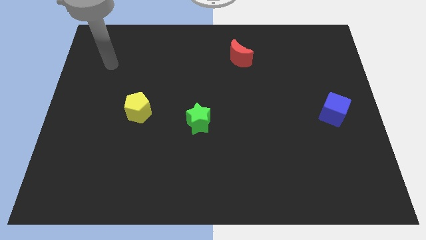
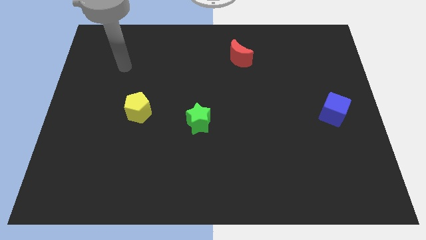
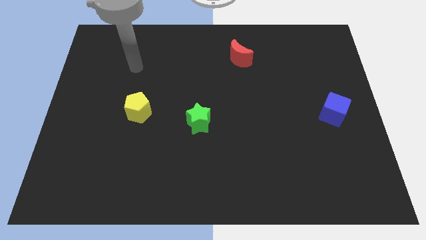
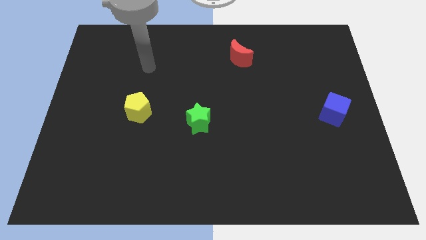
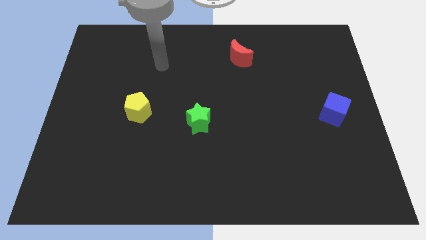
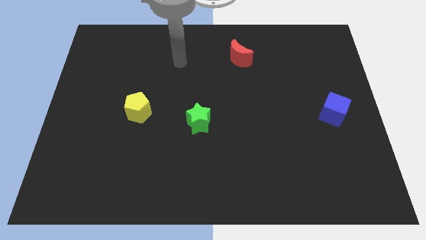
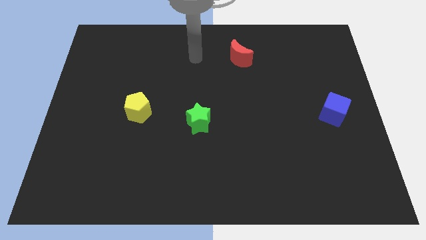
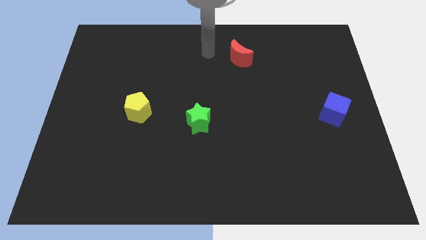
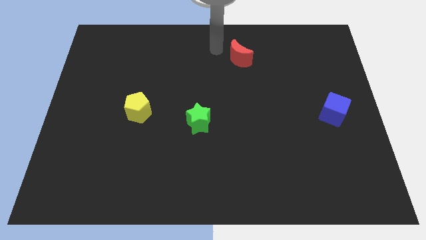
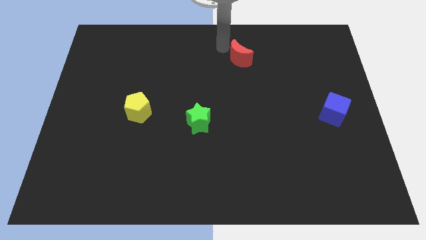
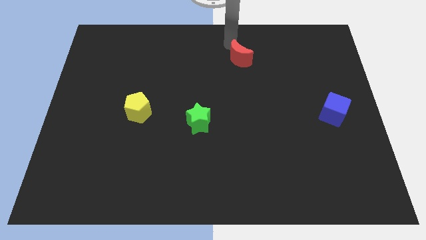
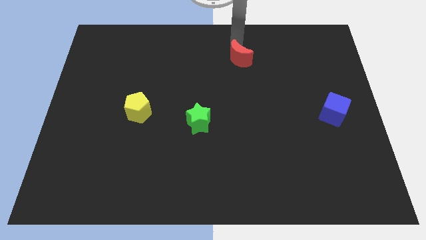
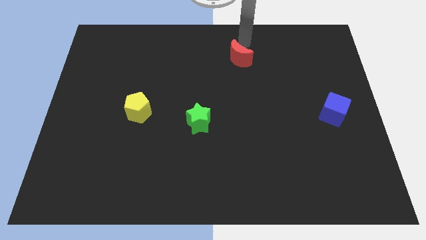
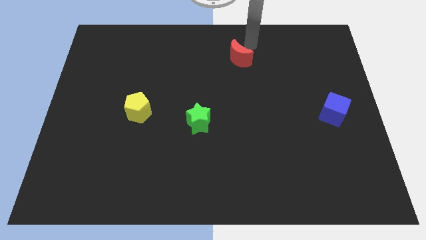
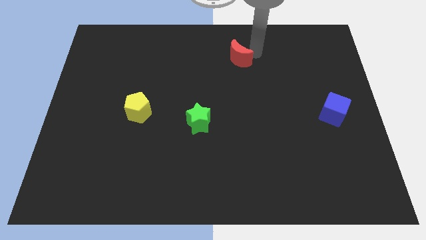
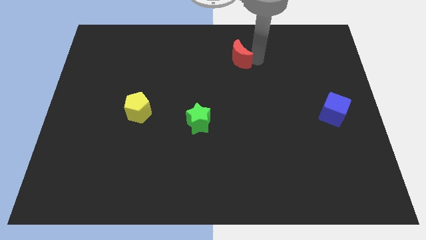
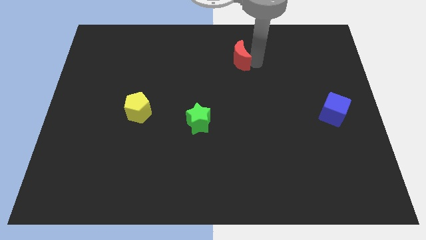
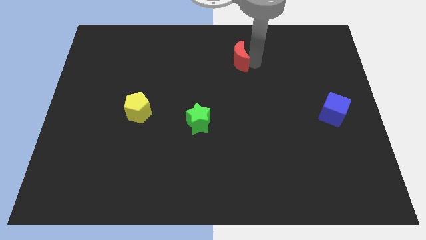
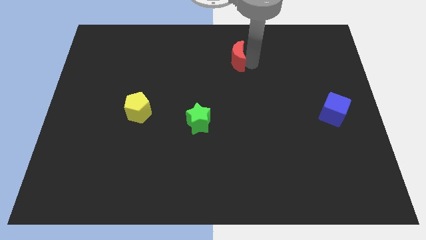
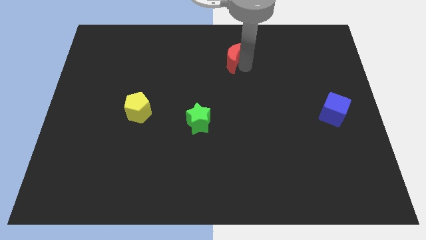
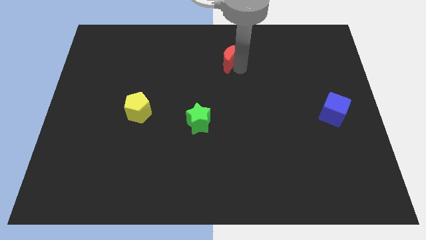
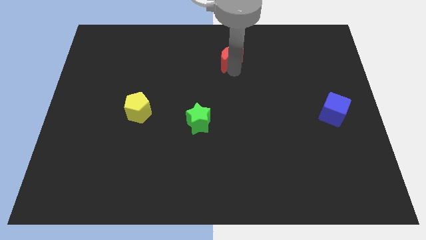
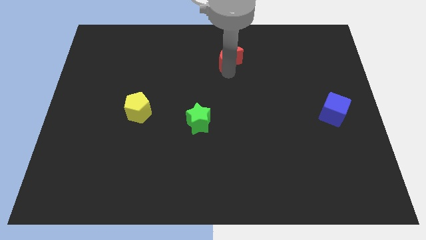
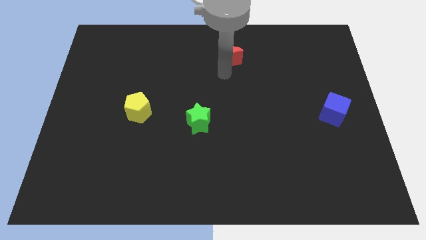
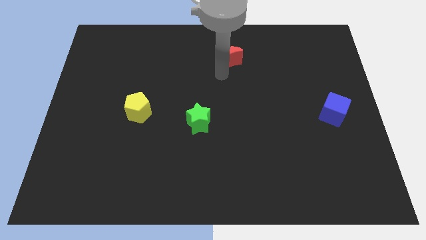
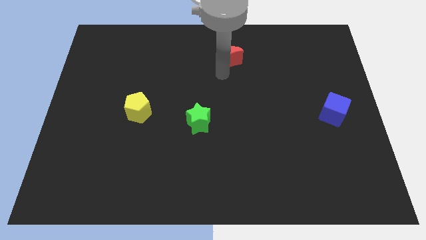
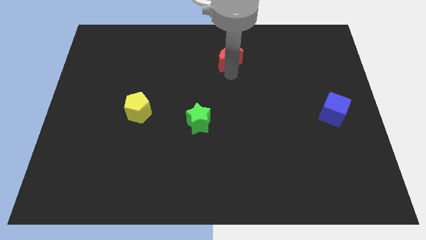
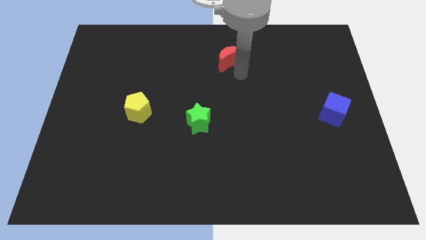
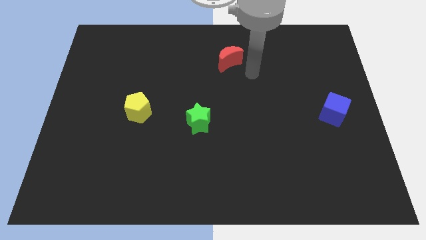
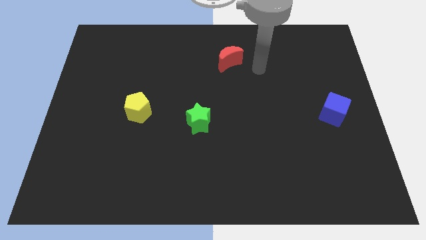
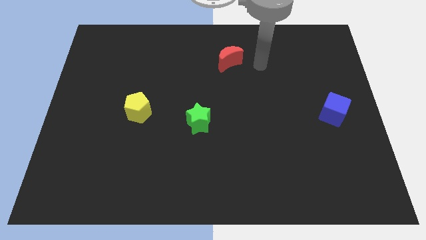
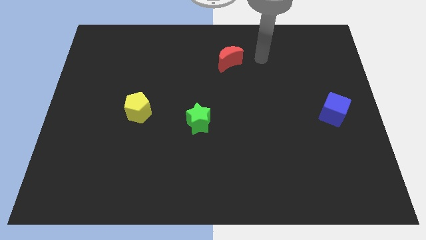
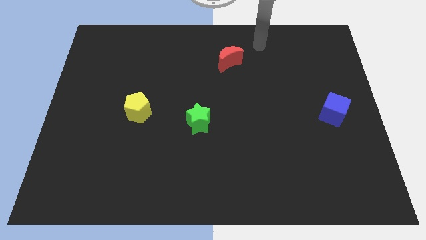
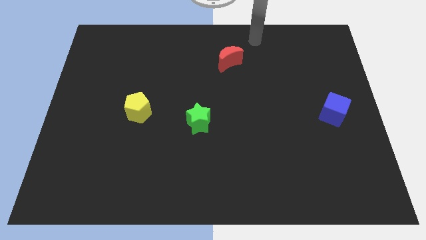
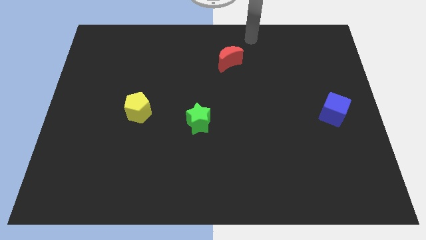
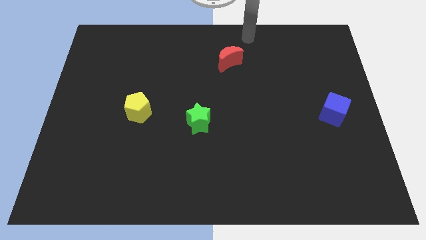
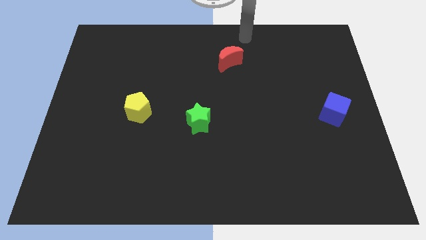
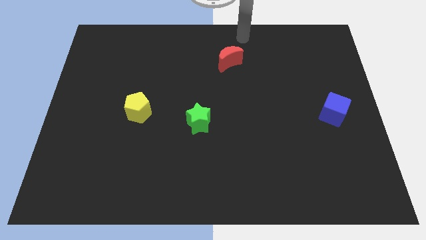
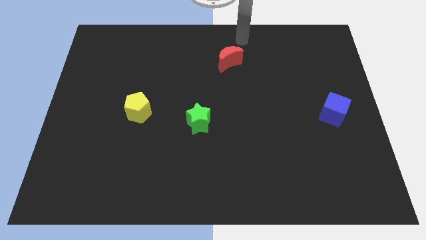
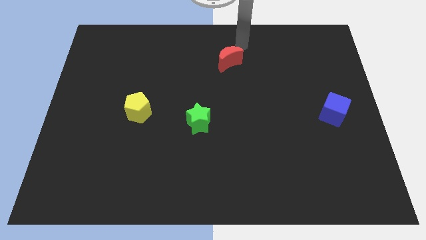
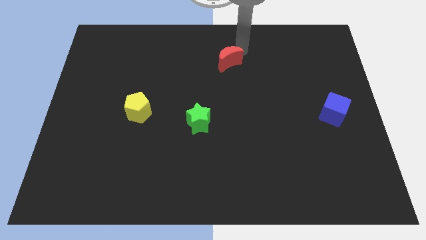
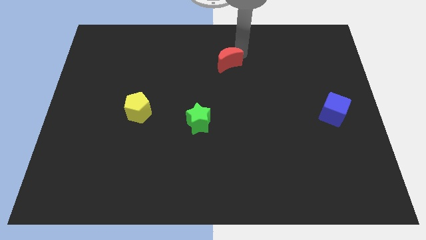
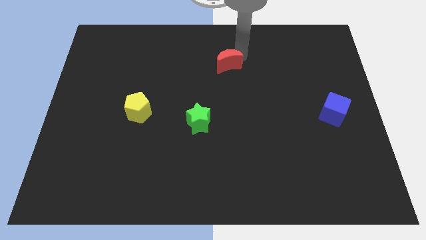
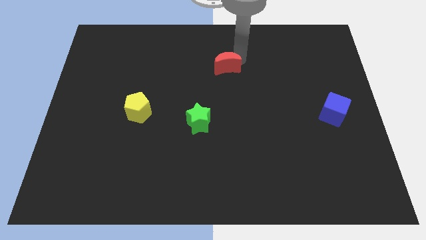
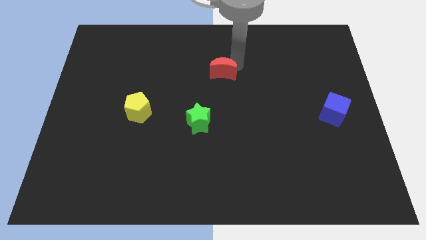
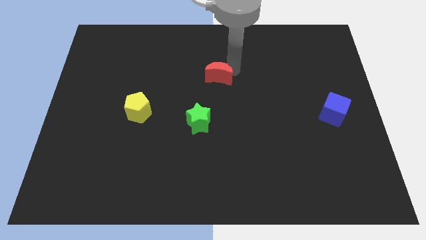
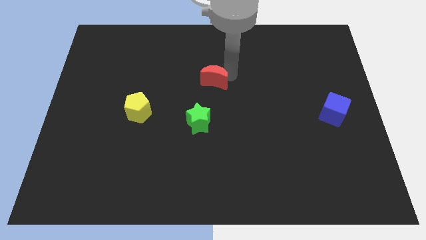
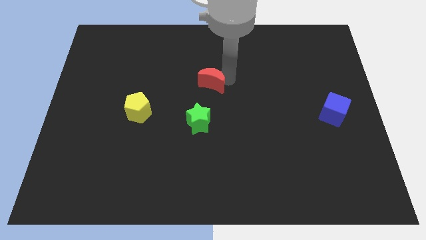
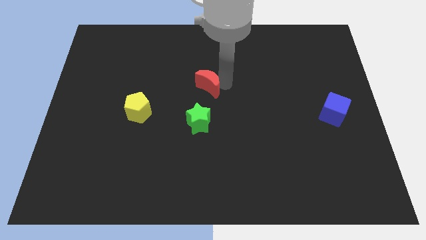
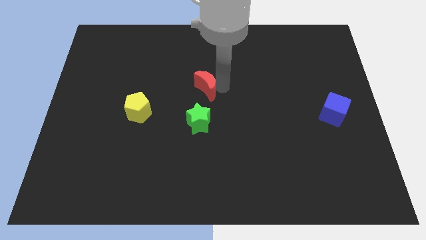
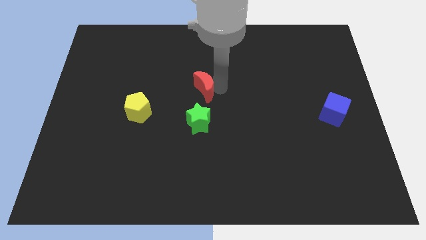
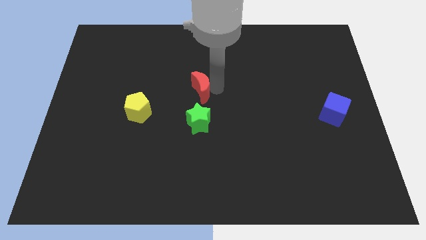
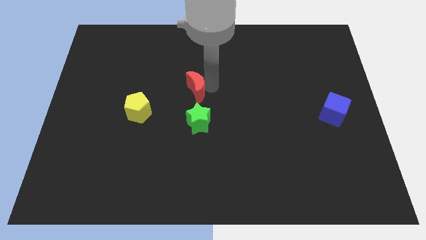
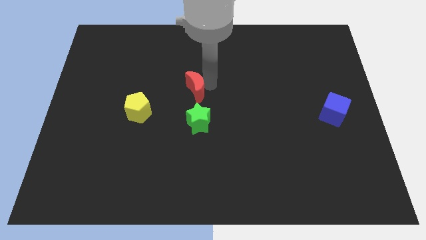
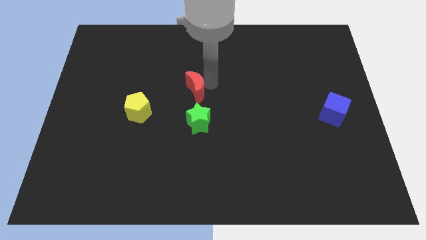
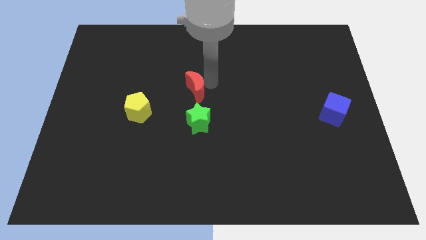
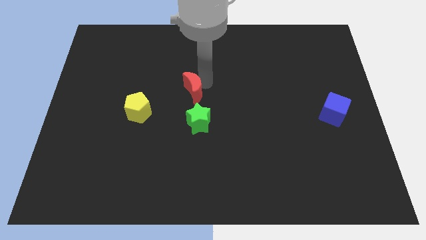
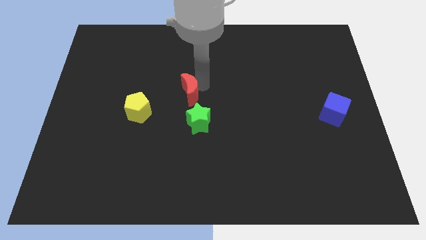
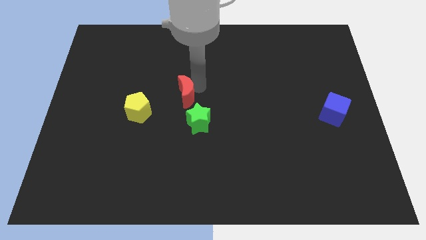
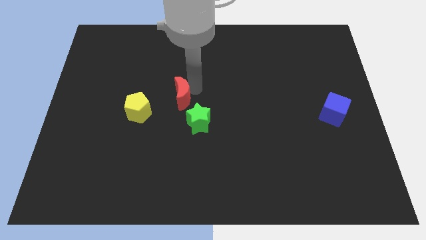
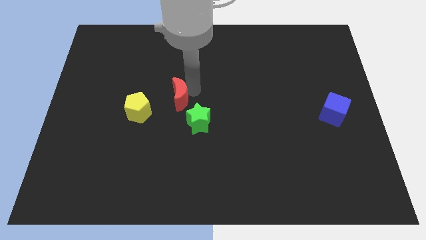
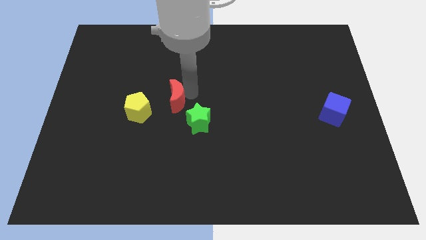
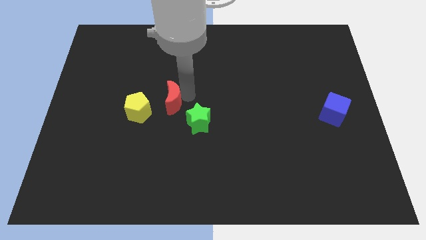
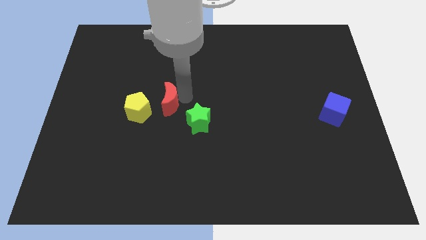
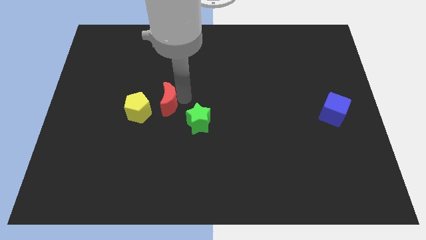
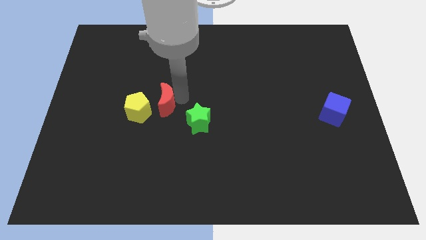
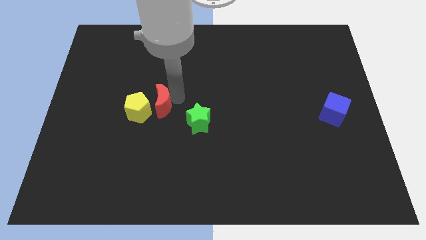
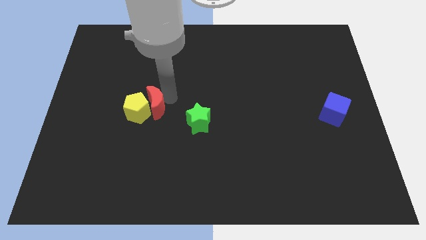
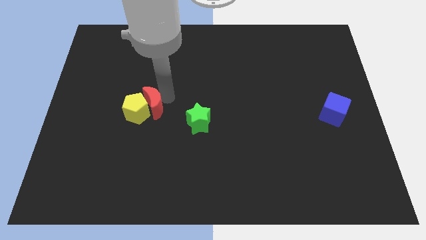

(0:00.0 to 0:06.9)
slide the moon towards the pentagon

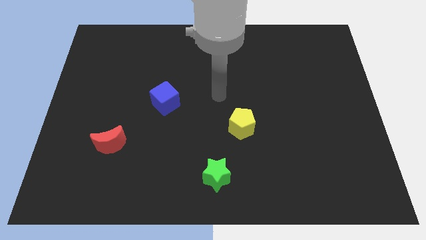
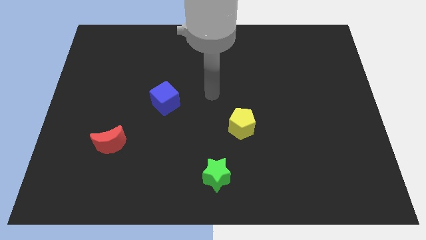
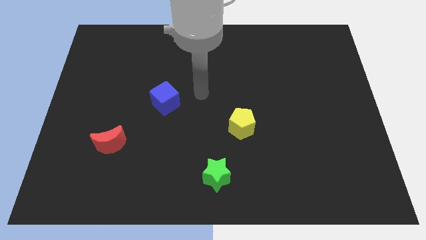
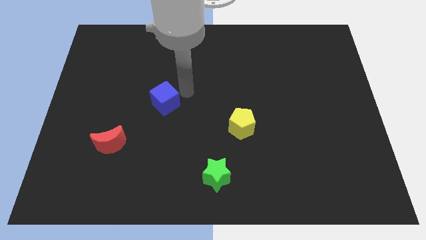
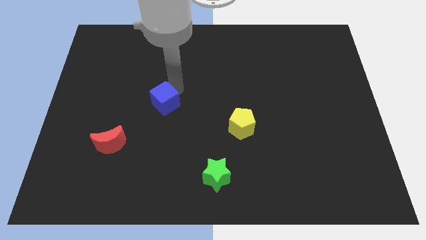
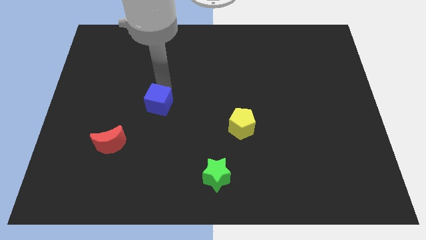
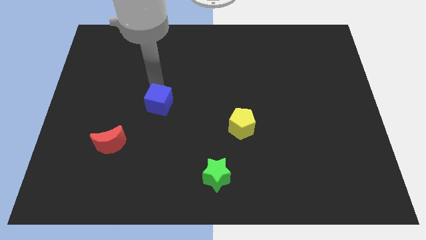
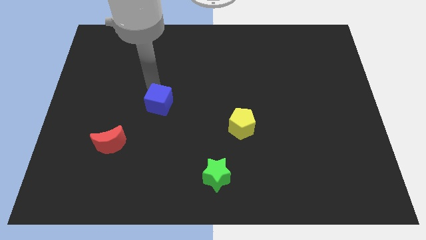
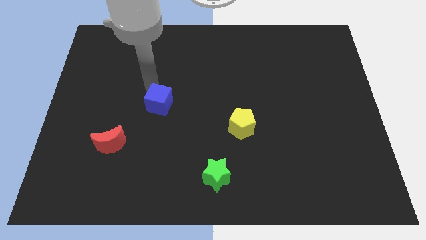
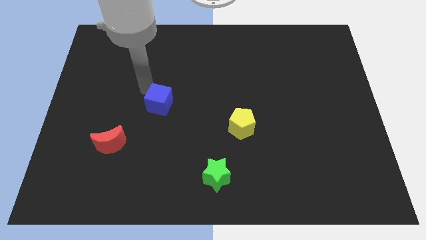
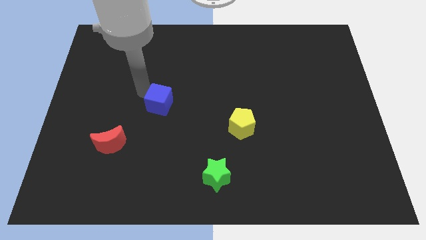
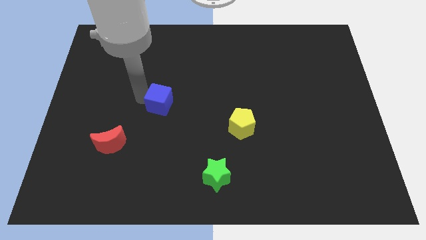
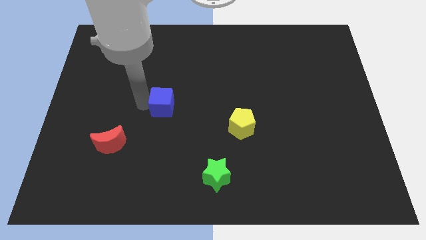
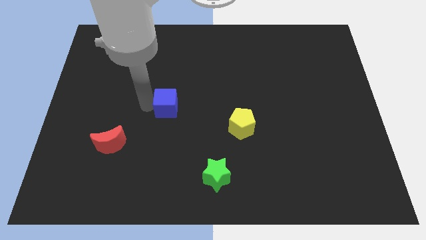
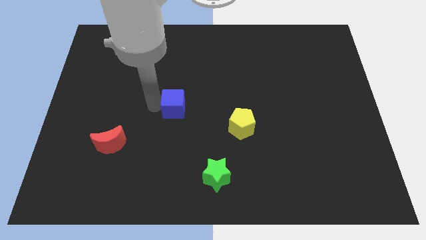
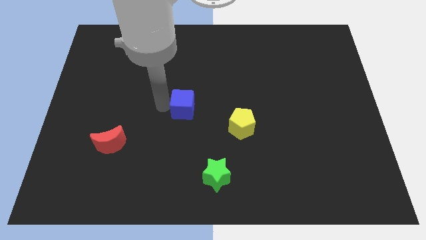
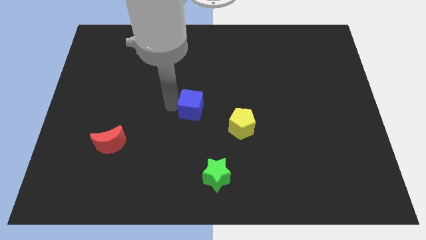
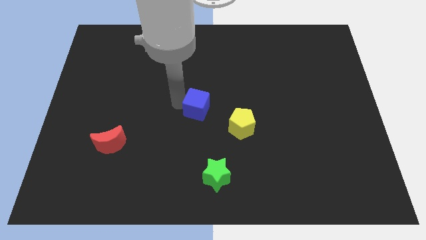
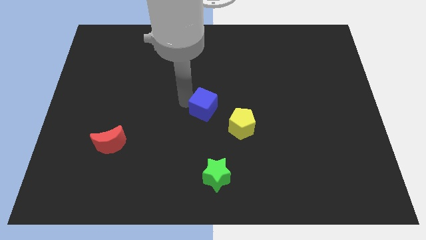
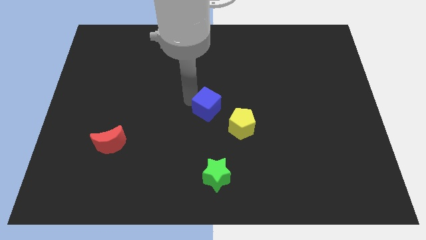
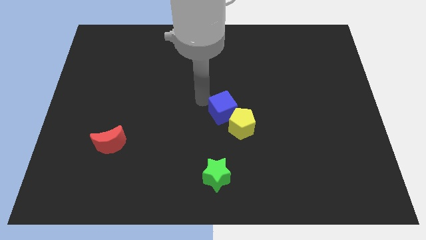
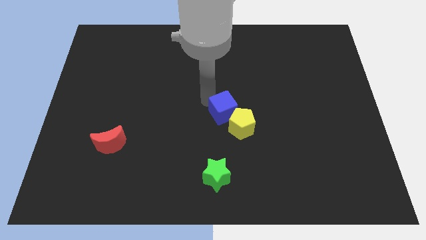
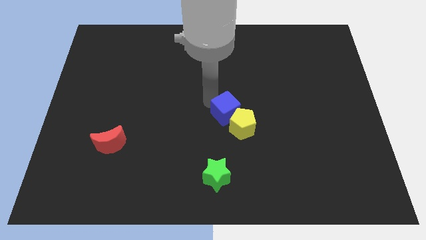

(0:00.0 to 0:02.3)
push the blue block close to the pentagon
